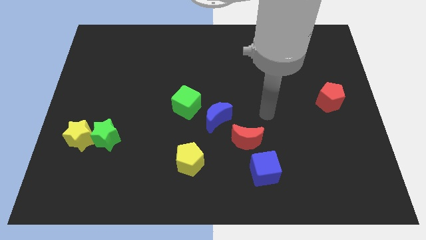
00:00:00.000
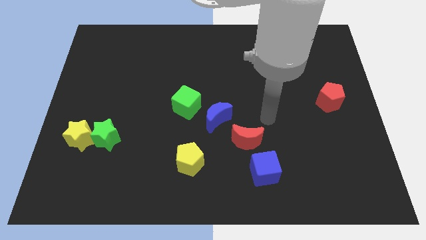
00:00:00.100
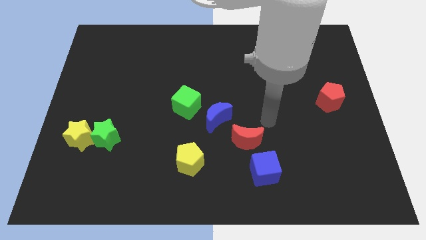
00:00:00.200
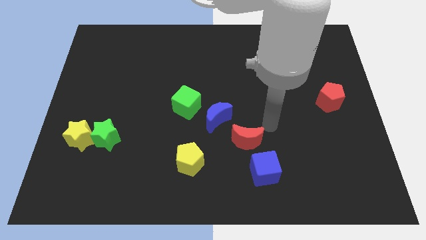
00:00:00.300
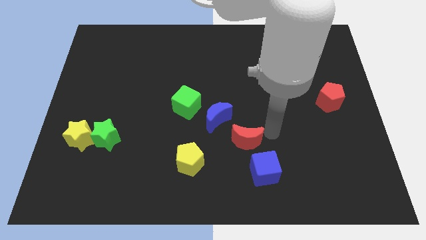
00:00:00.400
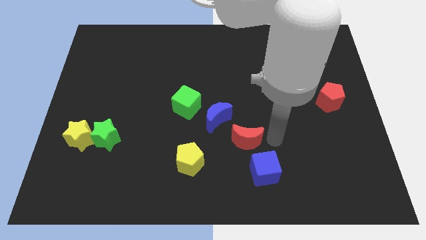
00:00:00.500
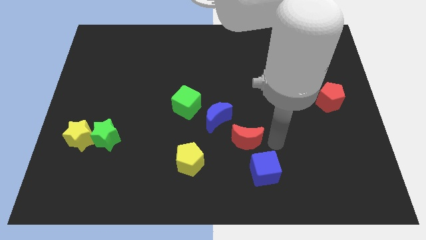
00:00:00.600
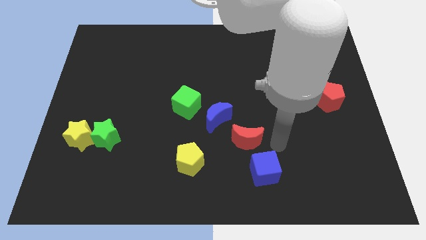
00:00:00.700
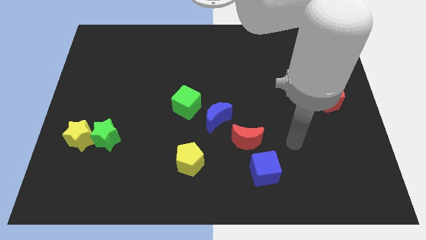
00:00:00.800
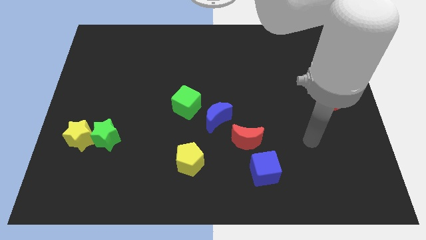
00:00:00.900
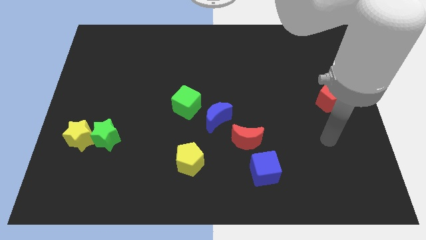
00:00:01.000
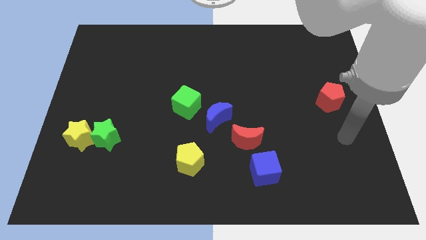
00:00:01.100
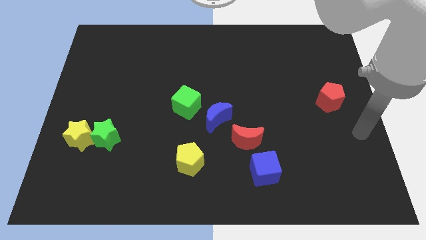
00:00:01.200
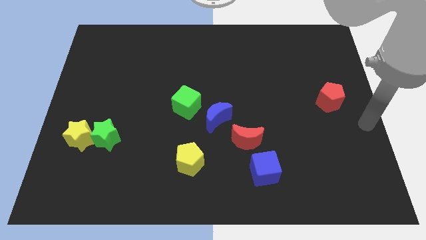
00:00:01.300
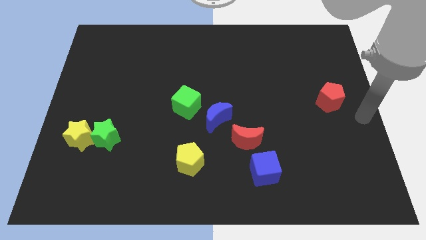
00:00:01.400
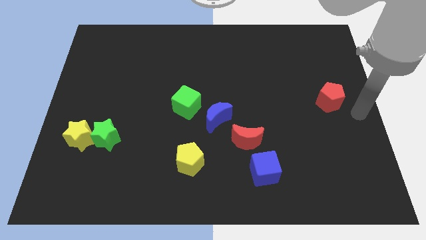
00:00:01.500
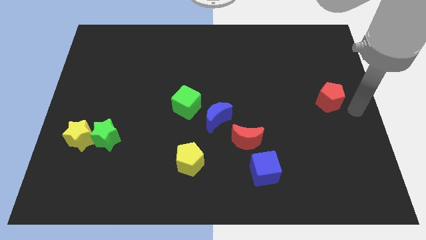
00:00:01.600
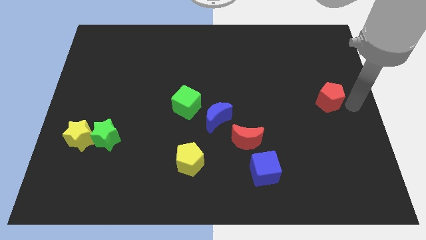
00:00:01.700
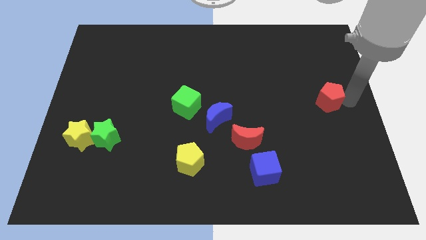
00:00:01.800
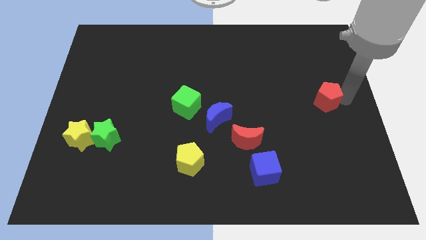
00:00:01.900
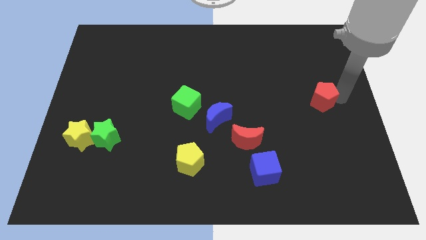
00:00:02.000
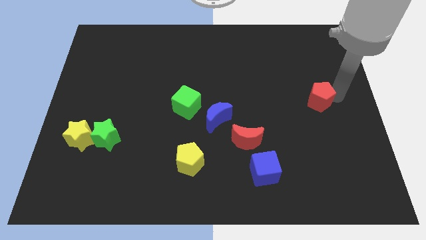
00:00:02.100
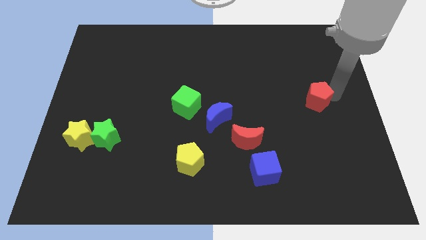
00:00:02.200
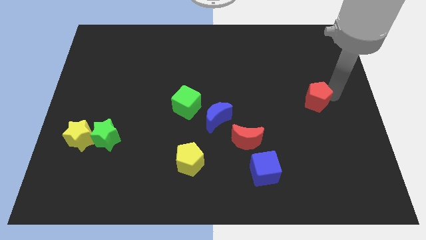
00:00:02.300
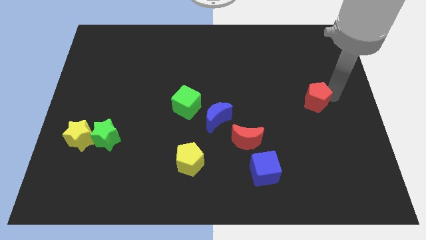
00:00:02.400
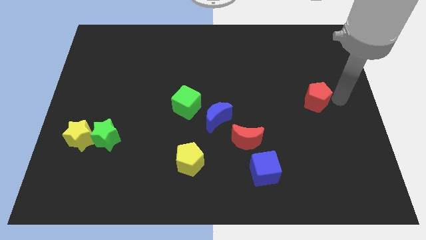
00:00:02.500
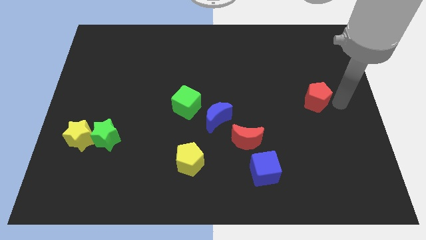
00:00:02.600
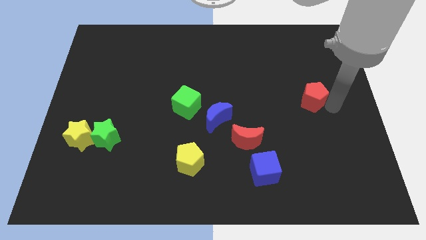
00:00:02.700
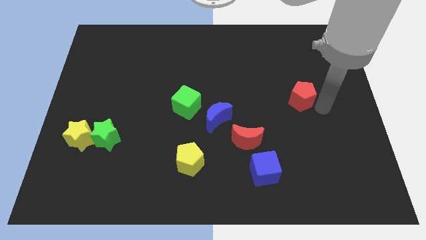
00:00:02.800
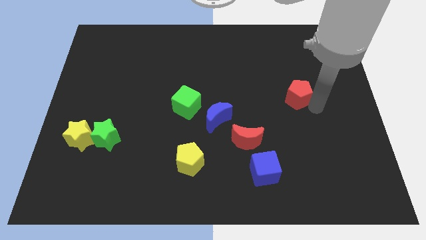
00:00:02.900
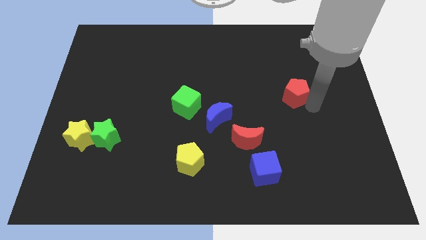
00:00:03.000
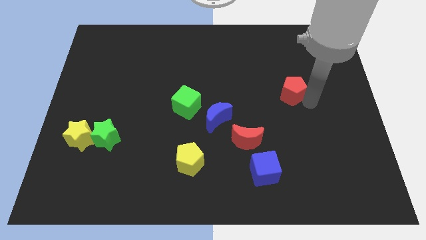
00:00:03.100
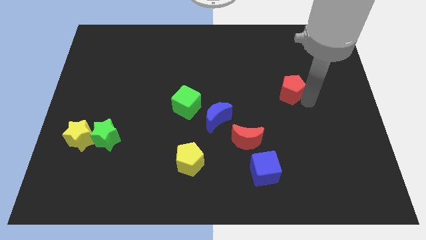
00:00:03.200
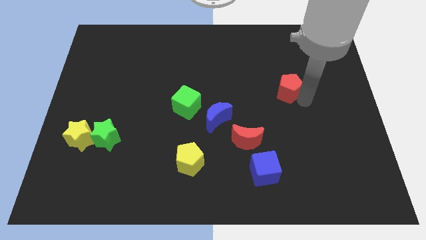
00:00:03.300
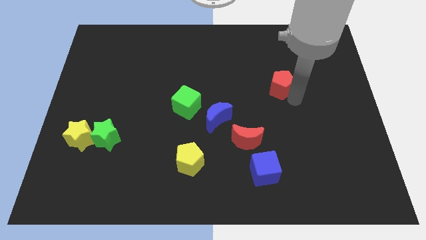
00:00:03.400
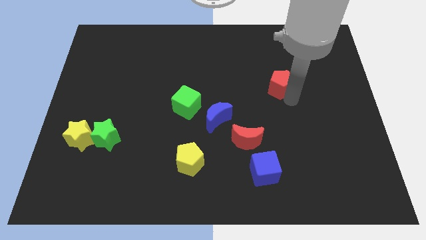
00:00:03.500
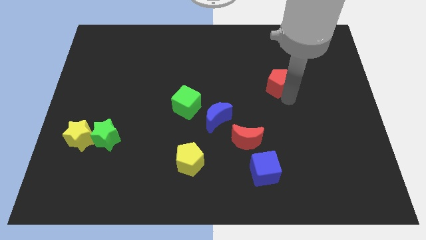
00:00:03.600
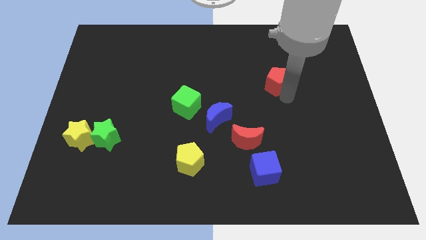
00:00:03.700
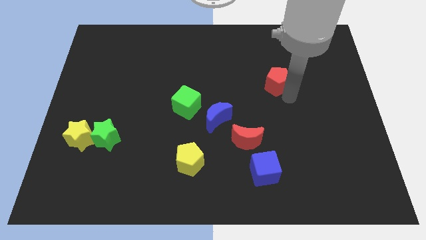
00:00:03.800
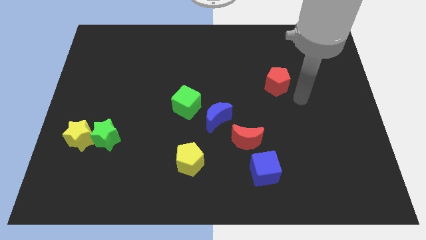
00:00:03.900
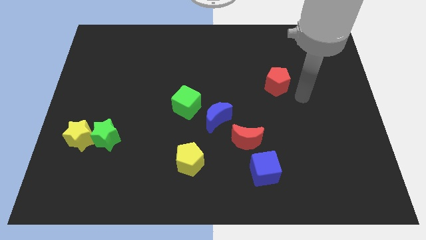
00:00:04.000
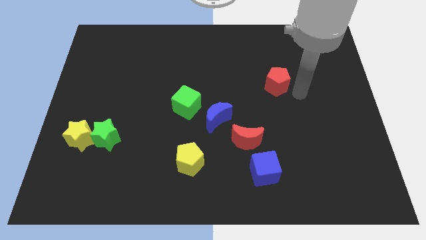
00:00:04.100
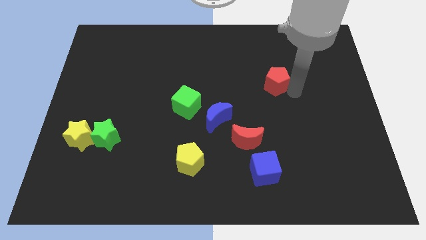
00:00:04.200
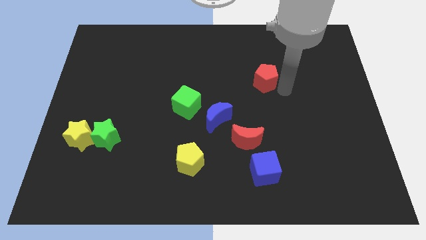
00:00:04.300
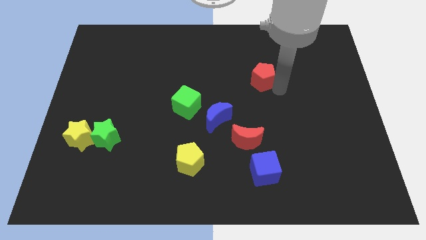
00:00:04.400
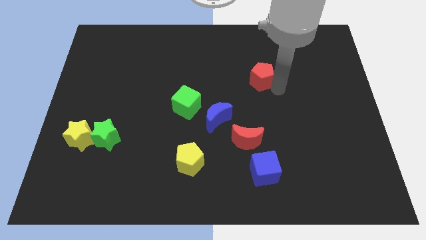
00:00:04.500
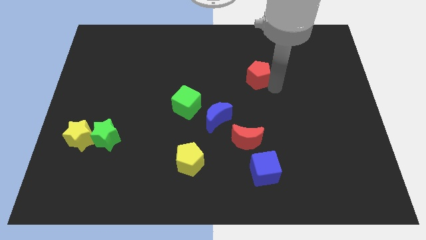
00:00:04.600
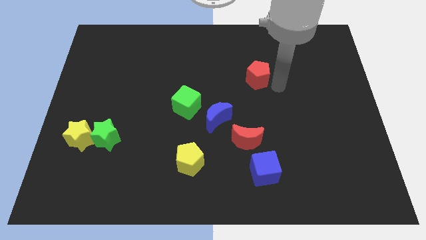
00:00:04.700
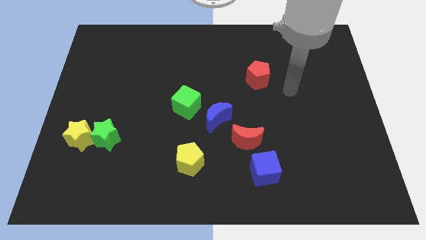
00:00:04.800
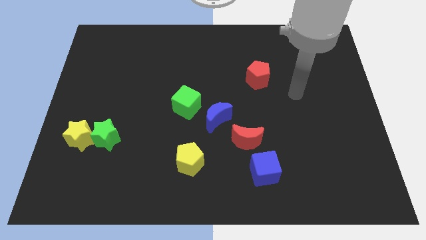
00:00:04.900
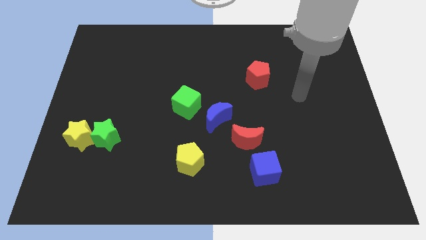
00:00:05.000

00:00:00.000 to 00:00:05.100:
move the red pentagon diagonal to the blue moon

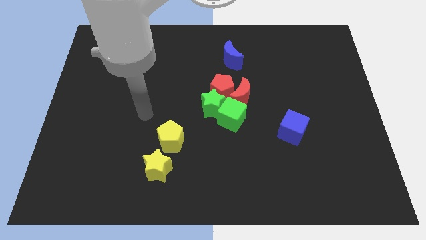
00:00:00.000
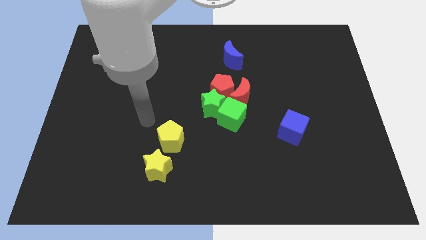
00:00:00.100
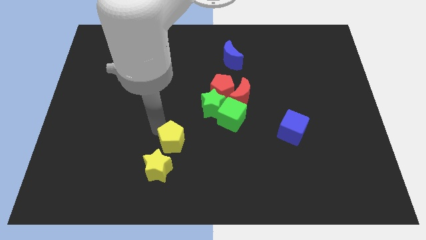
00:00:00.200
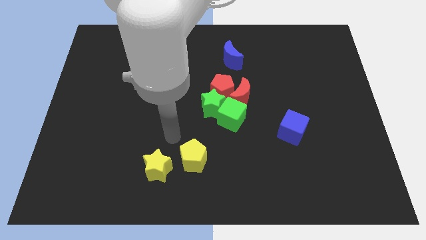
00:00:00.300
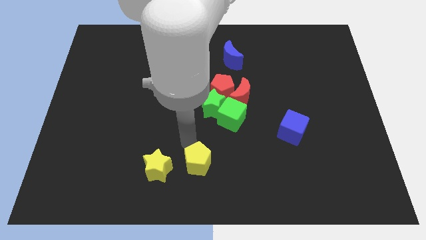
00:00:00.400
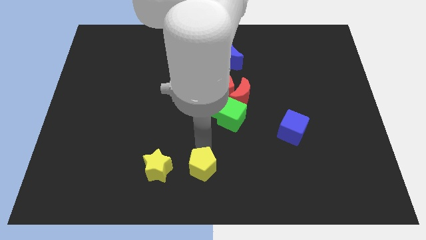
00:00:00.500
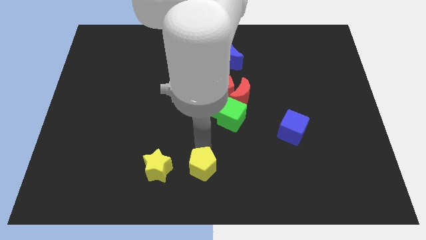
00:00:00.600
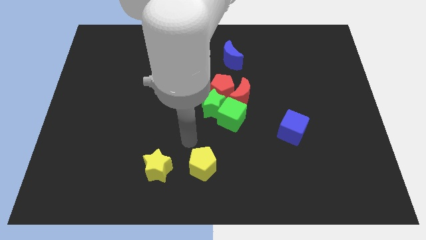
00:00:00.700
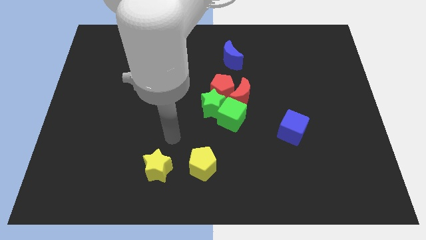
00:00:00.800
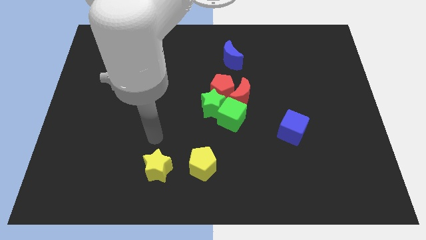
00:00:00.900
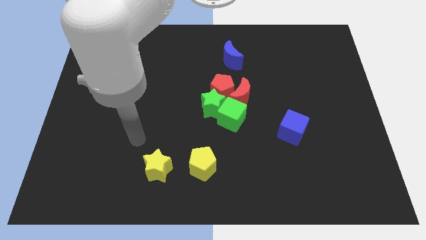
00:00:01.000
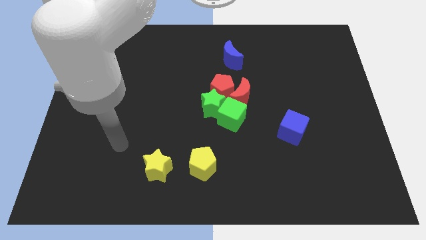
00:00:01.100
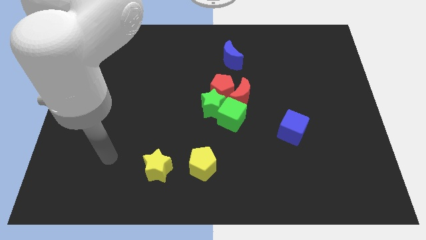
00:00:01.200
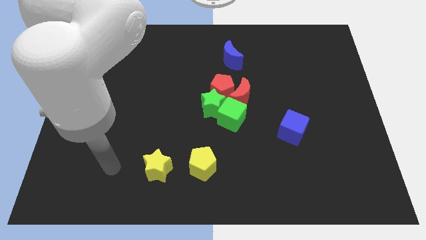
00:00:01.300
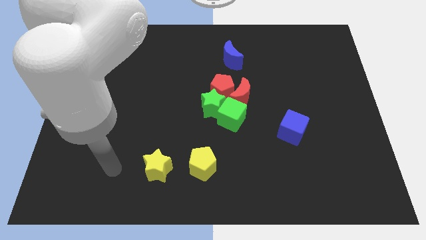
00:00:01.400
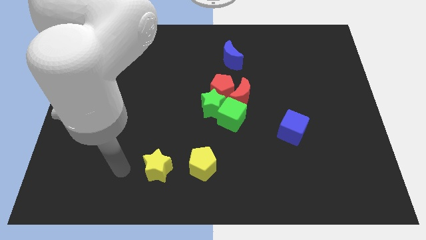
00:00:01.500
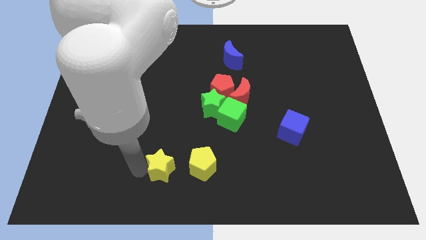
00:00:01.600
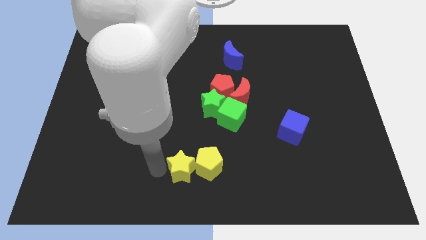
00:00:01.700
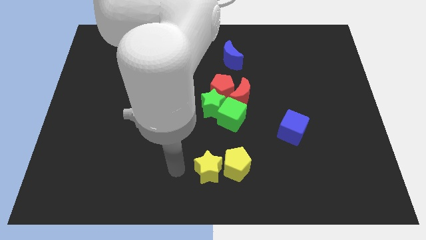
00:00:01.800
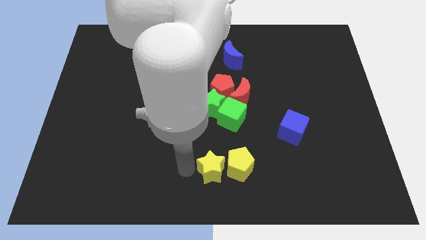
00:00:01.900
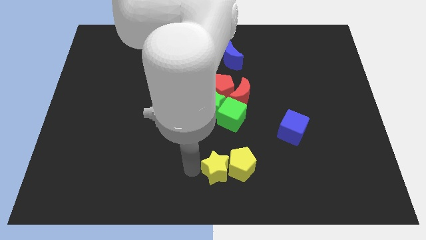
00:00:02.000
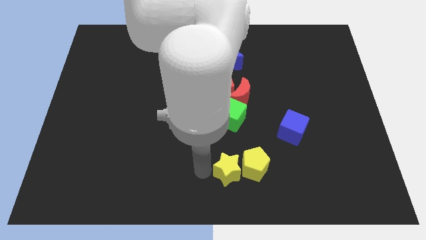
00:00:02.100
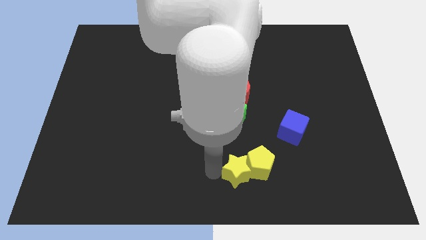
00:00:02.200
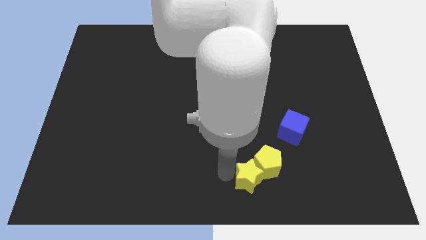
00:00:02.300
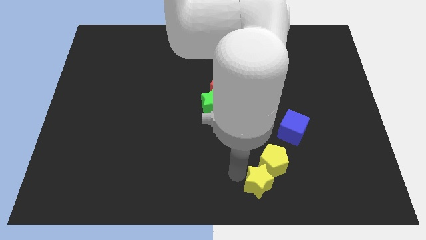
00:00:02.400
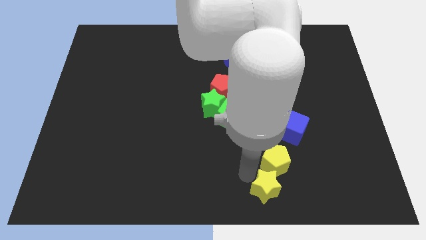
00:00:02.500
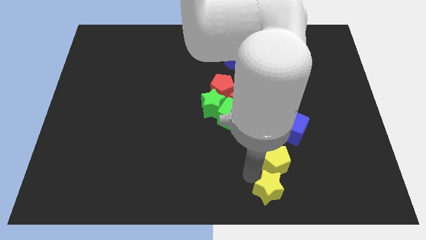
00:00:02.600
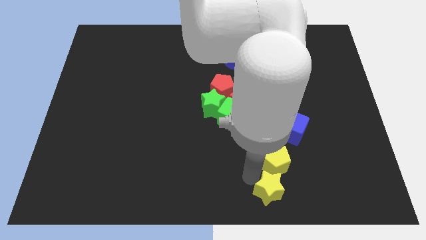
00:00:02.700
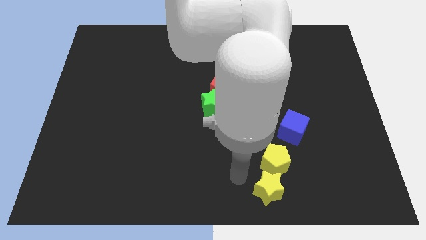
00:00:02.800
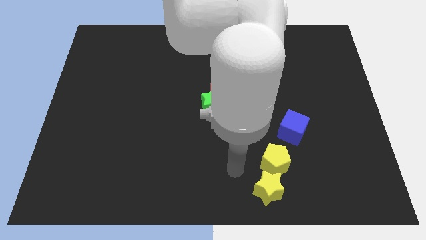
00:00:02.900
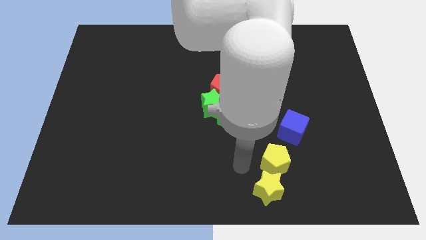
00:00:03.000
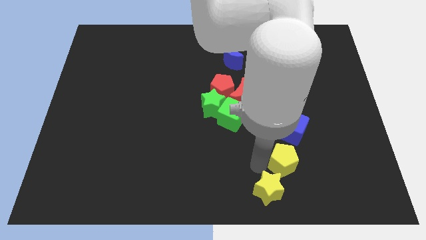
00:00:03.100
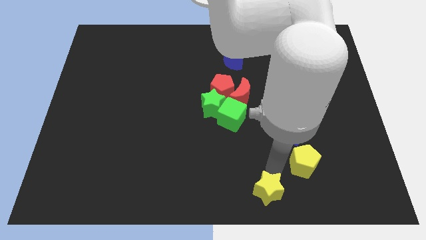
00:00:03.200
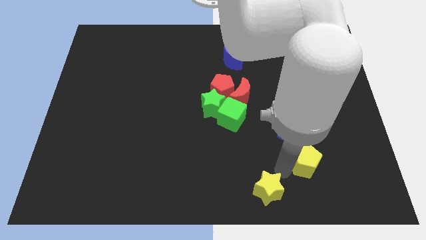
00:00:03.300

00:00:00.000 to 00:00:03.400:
push the yellow pentagon and yellow star towards the right side of the board

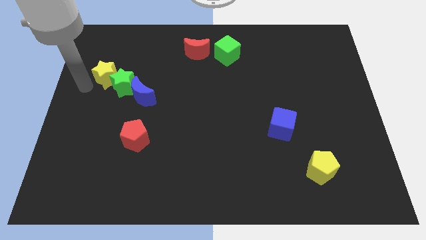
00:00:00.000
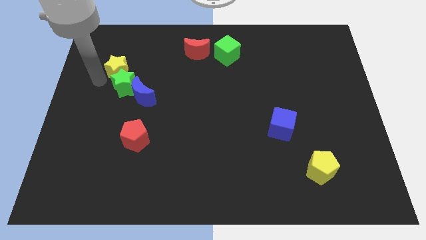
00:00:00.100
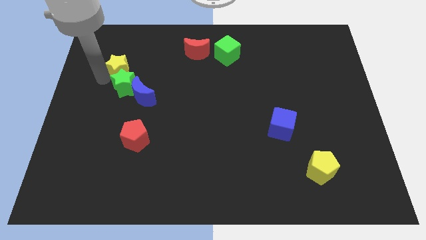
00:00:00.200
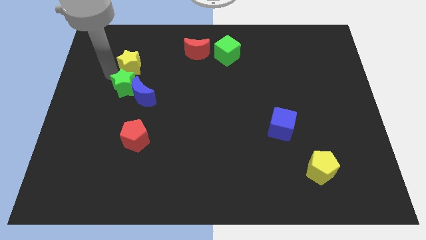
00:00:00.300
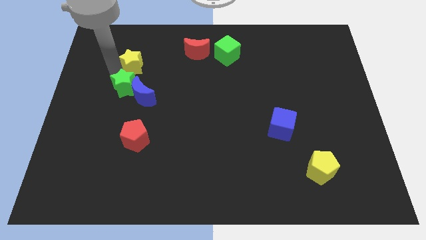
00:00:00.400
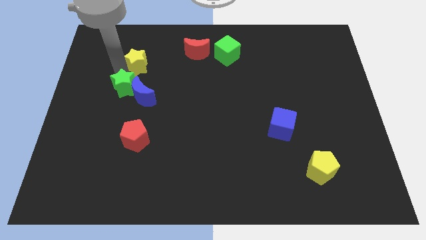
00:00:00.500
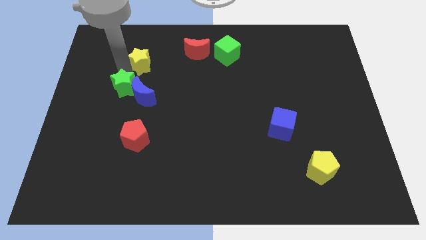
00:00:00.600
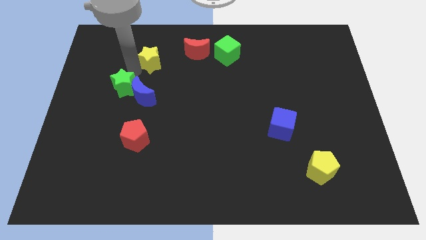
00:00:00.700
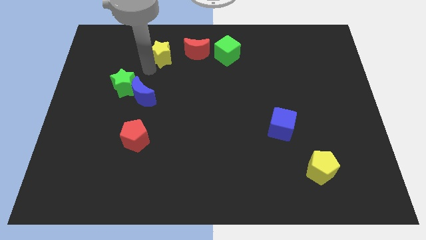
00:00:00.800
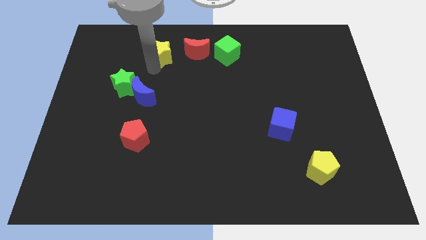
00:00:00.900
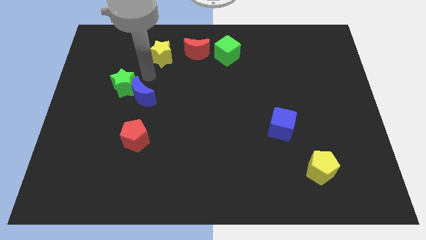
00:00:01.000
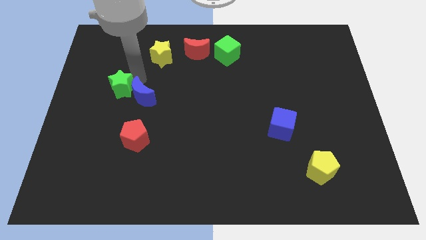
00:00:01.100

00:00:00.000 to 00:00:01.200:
move the yellow star left beside the red crescent
